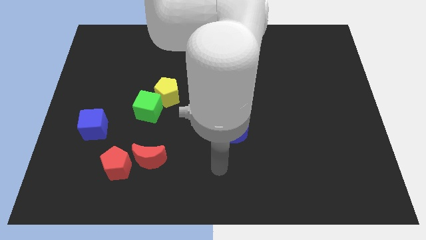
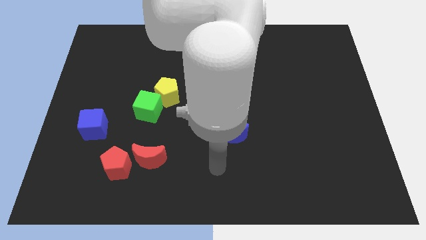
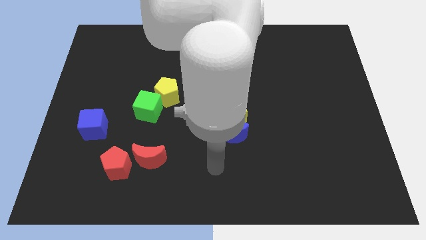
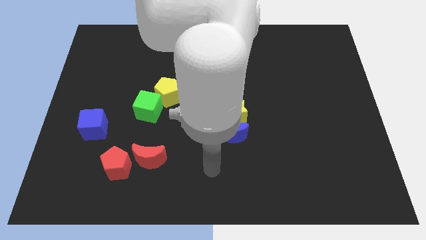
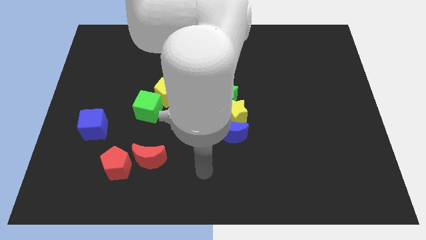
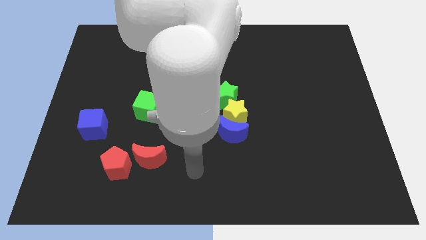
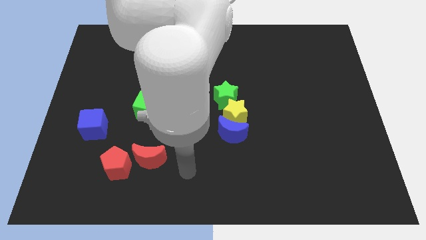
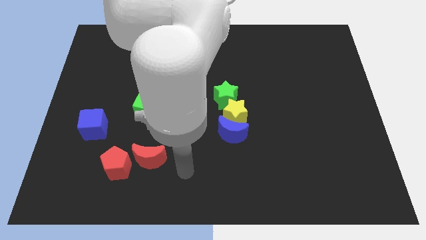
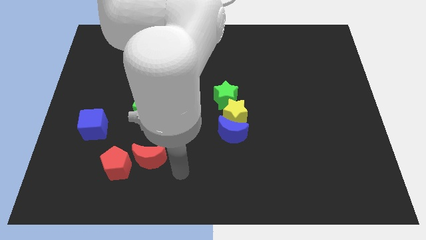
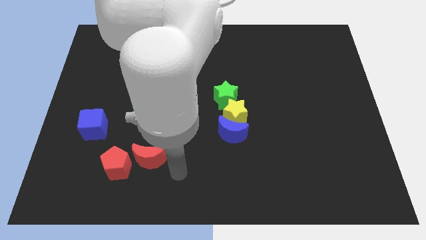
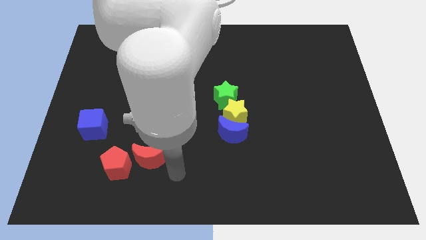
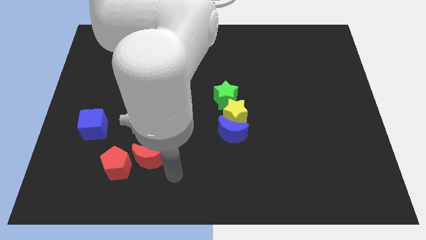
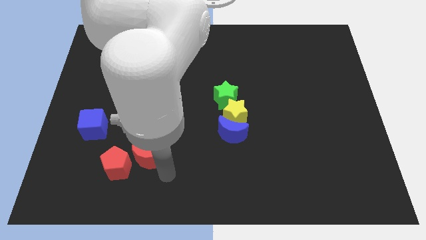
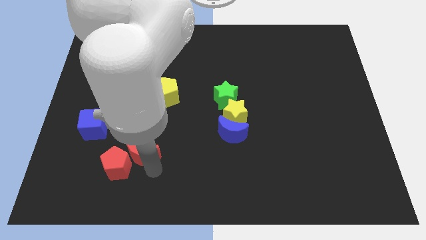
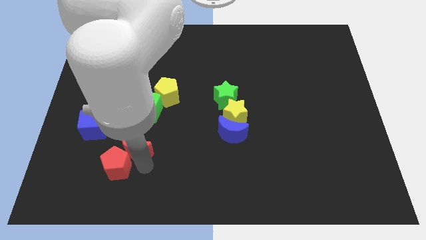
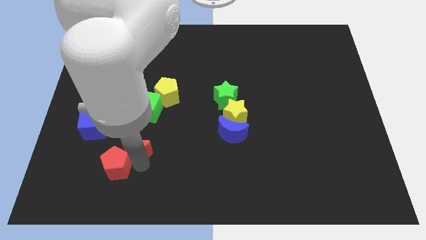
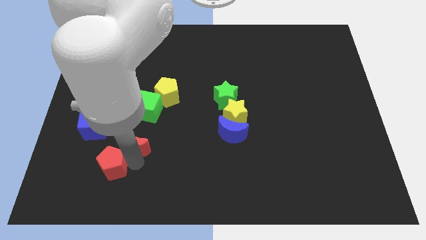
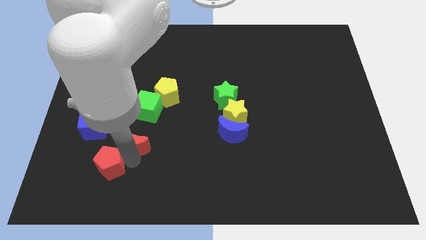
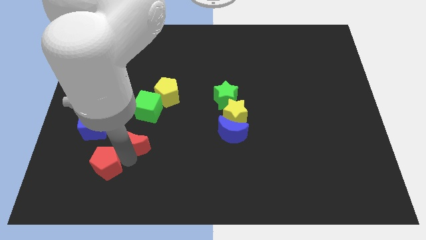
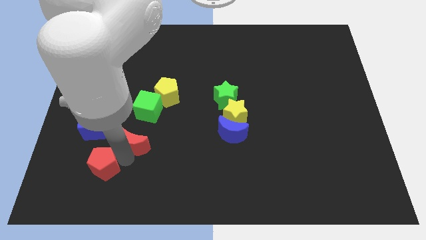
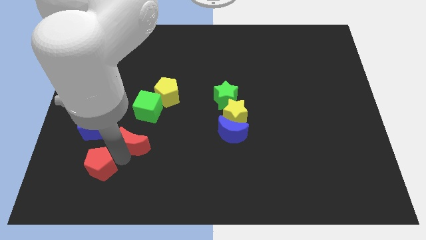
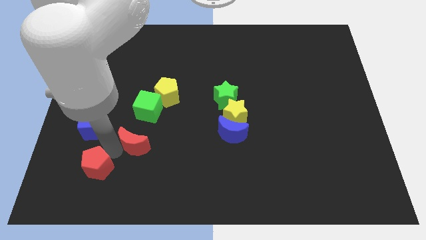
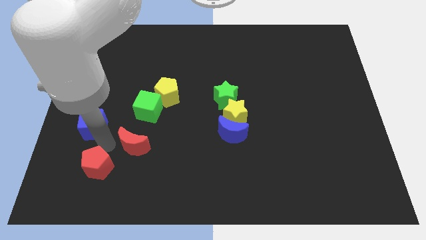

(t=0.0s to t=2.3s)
push the red pentagon slightly to the left

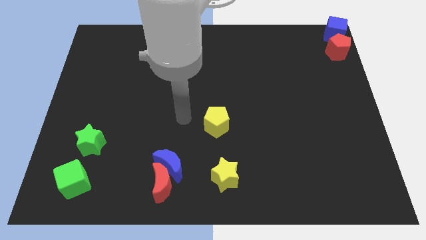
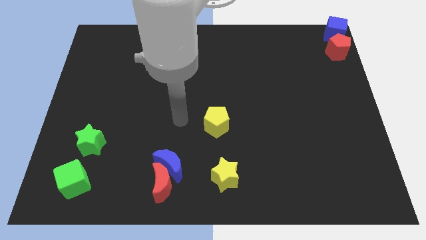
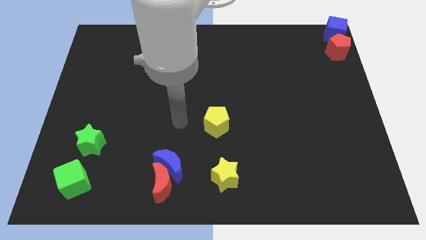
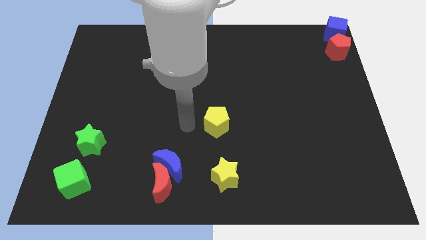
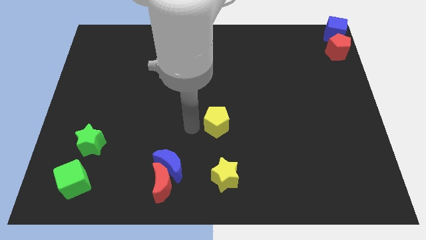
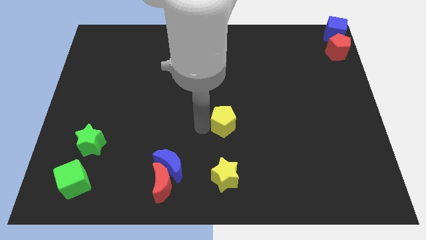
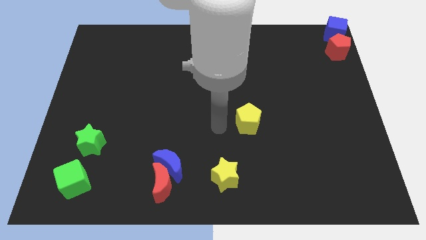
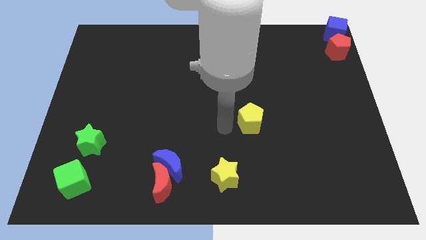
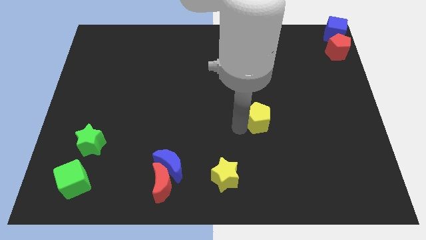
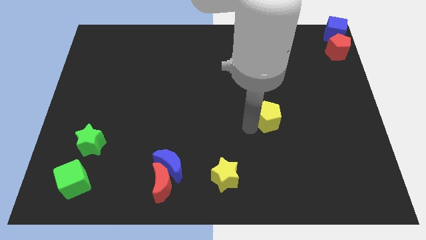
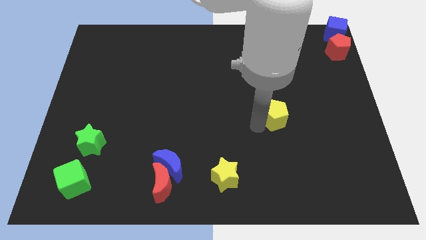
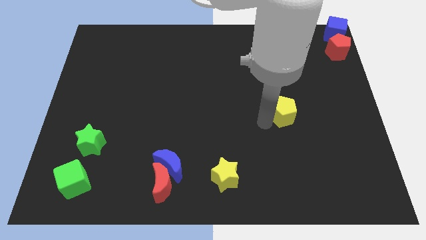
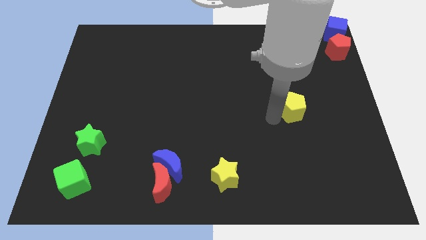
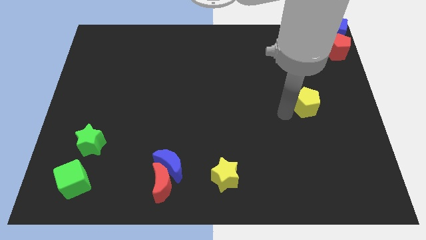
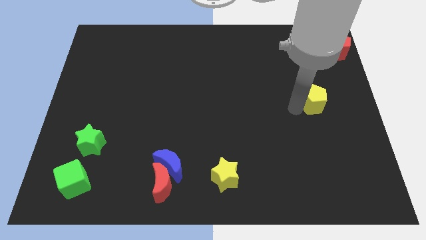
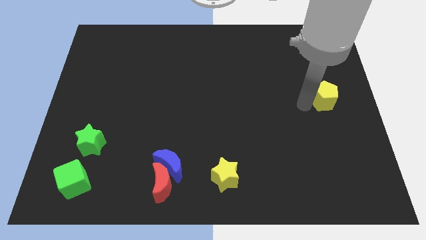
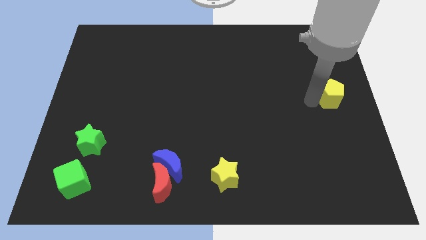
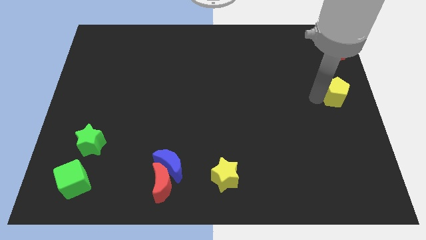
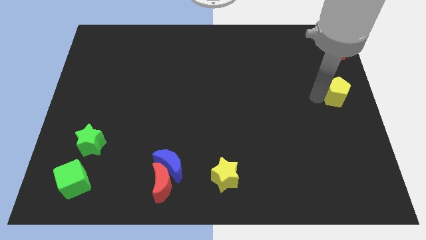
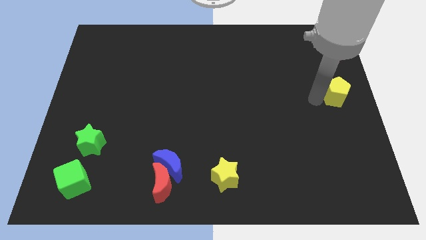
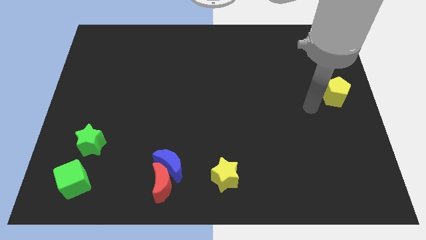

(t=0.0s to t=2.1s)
move yellow pentagon towards center right

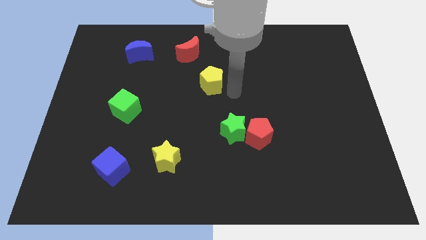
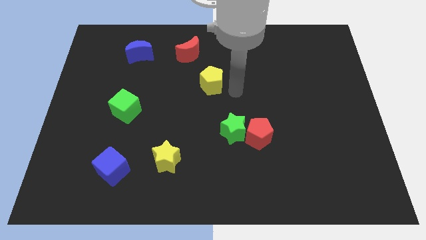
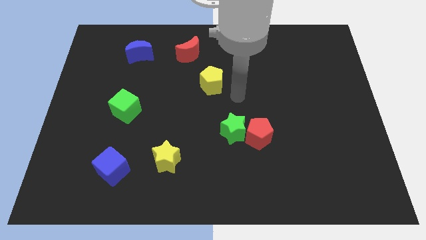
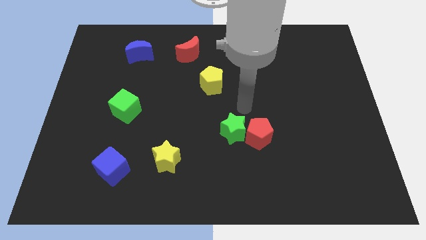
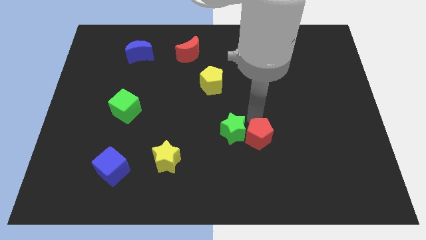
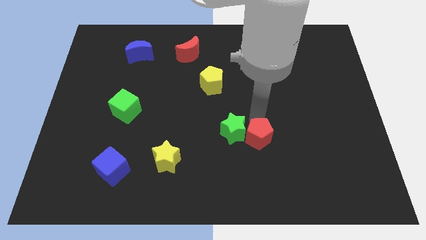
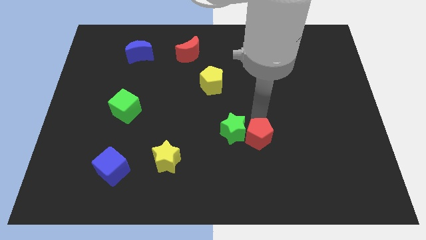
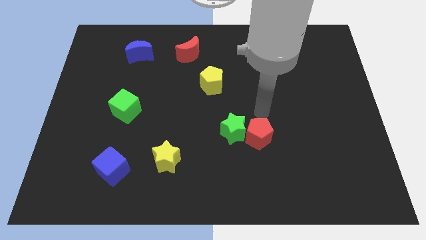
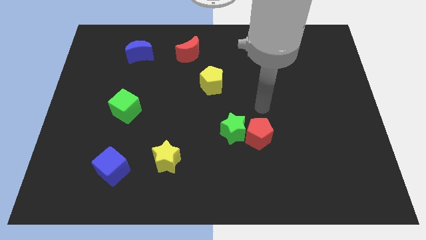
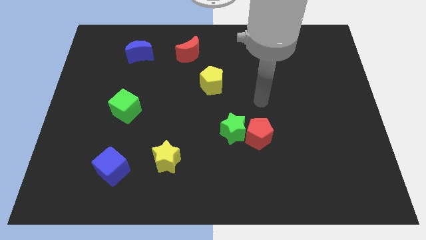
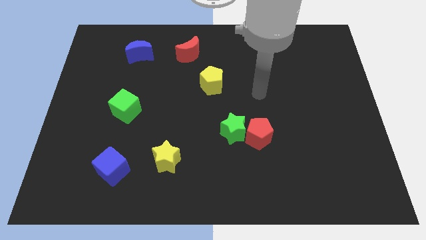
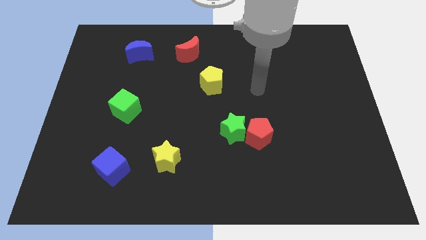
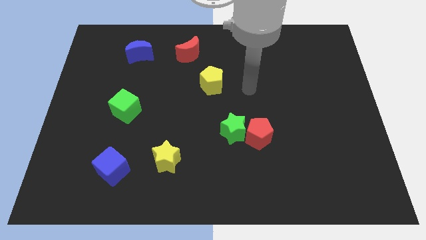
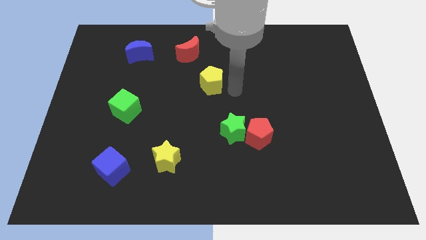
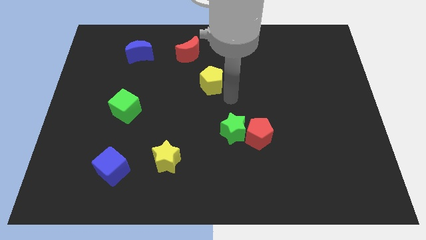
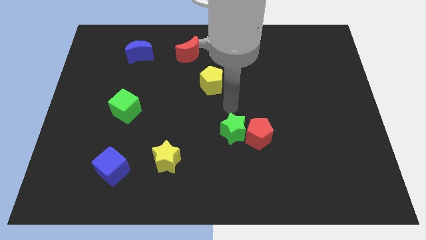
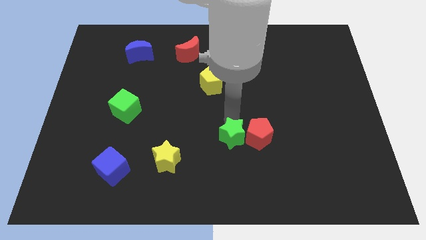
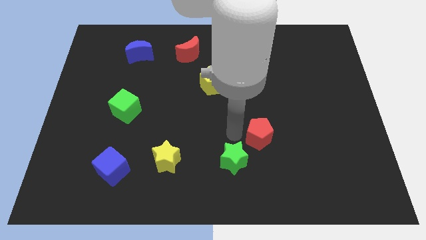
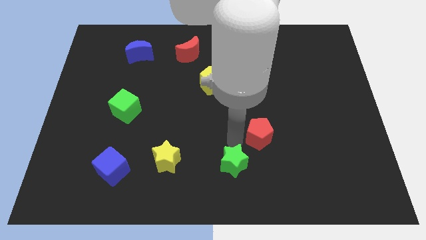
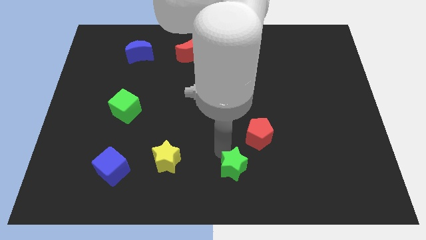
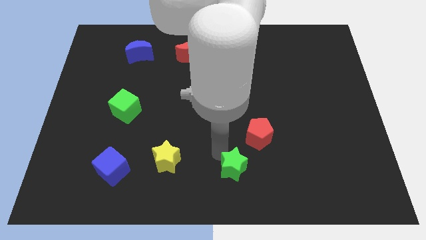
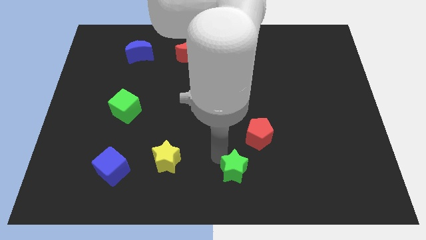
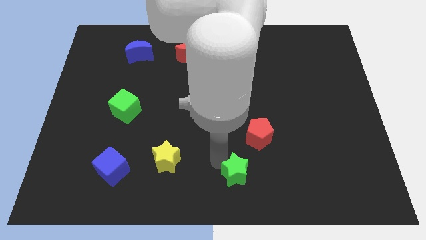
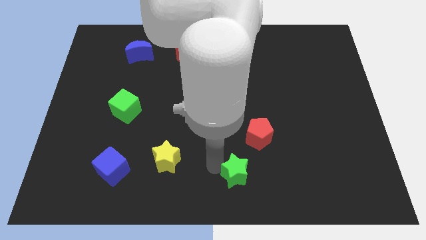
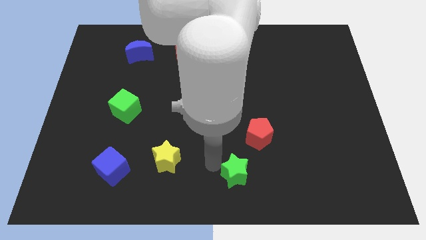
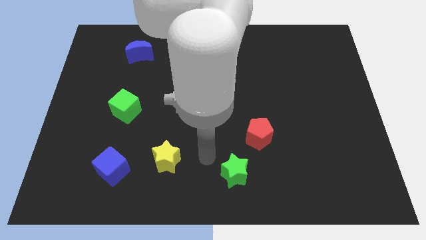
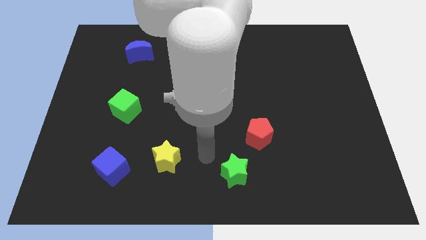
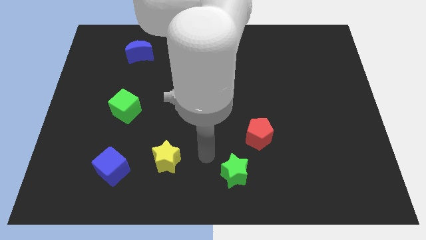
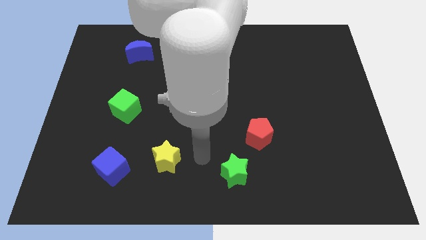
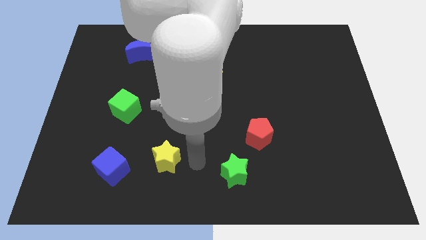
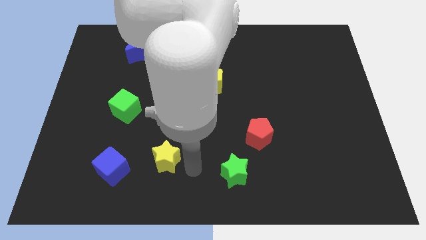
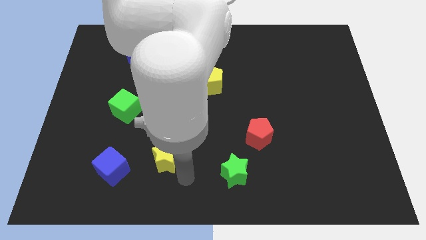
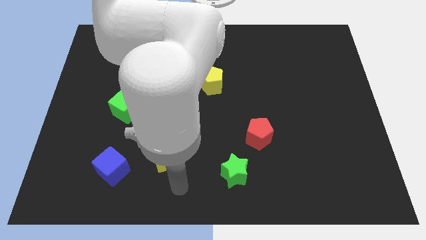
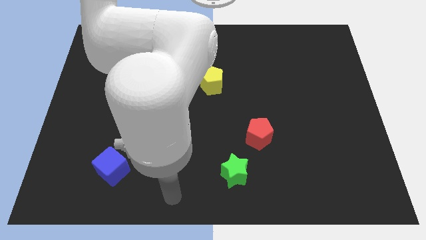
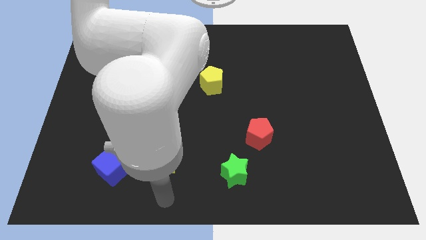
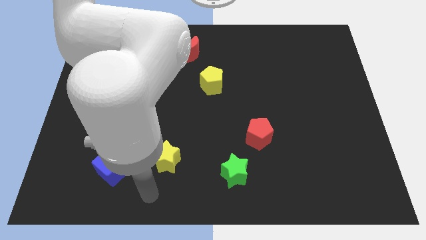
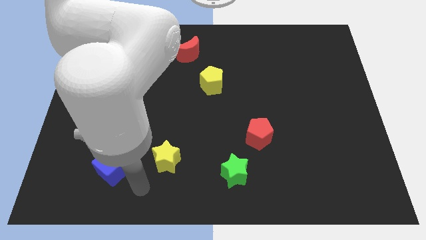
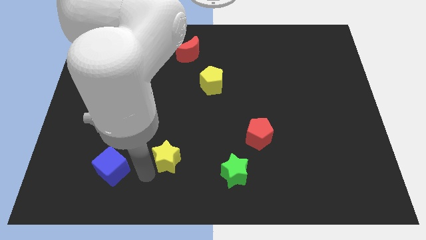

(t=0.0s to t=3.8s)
slide the green star to the bottom side of the board

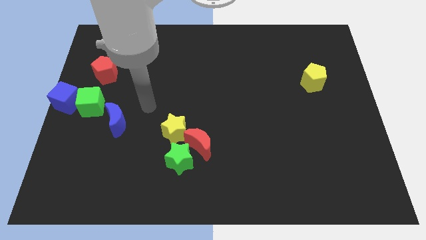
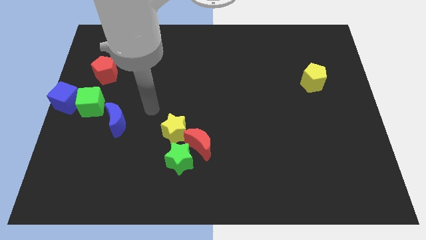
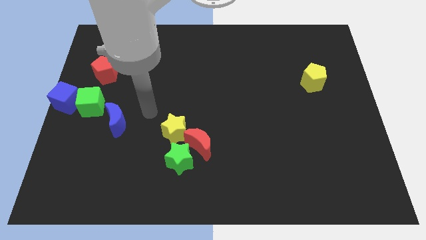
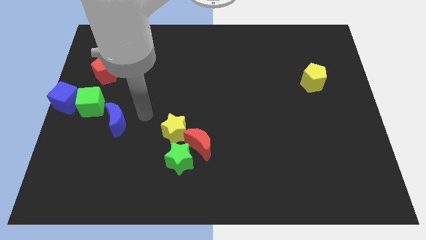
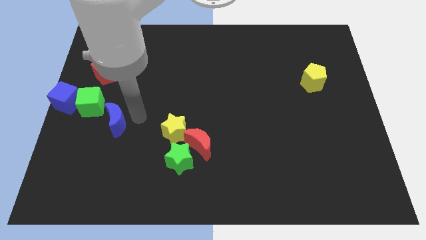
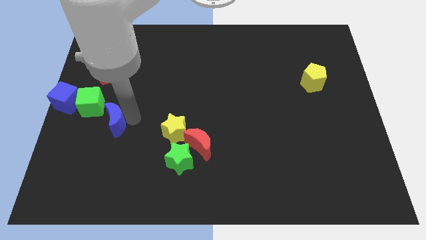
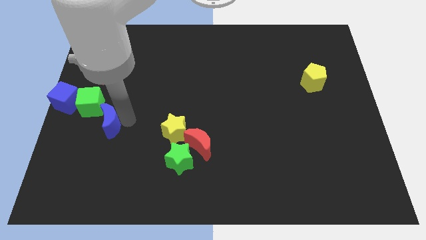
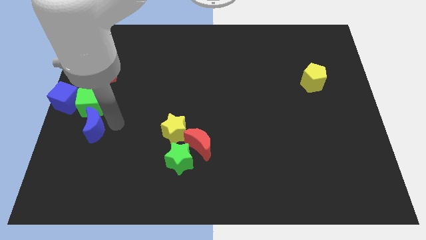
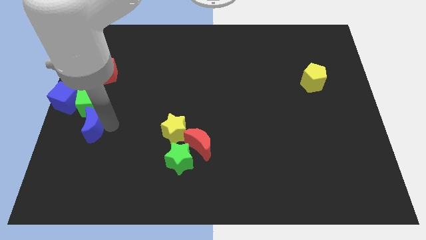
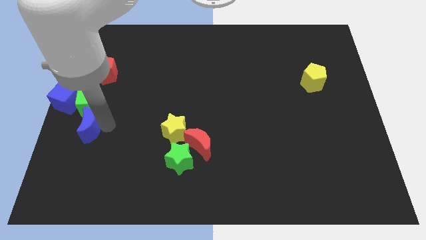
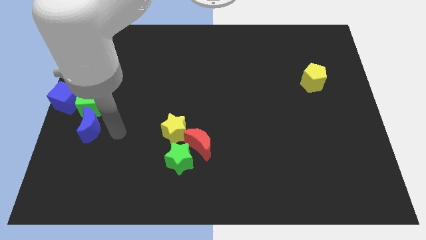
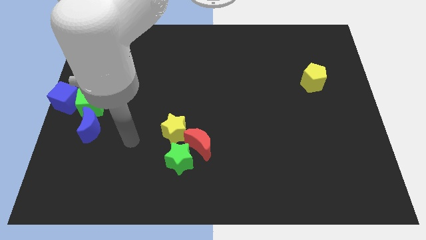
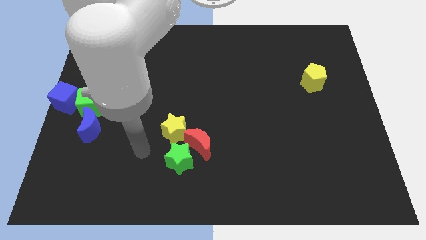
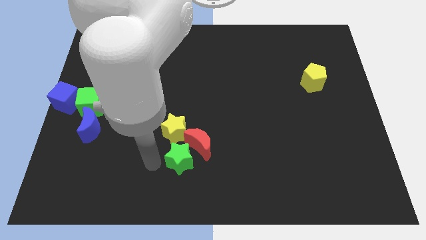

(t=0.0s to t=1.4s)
put the blue moon to the bottom side of the green cube
